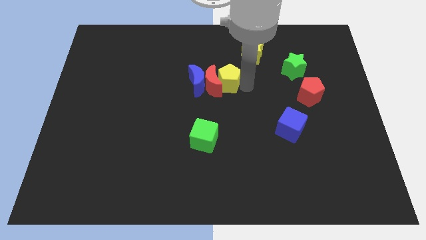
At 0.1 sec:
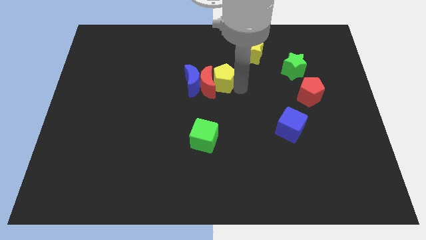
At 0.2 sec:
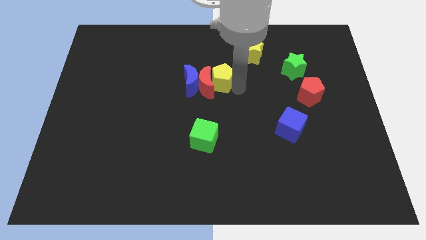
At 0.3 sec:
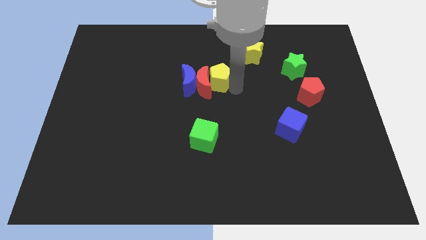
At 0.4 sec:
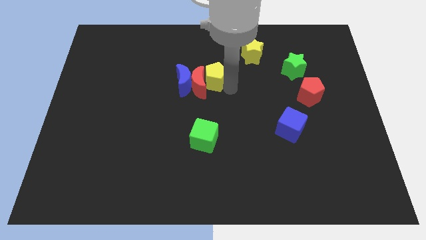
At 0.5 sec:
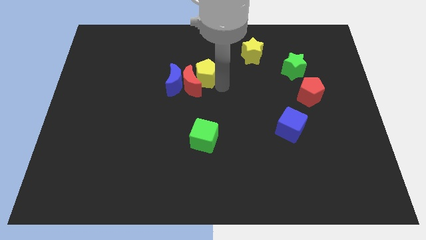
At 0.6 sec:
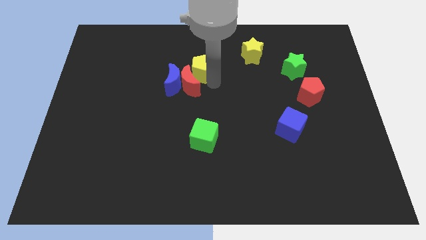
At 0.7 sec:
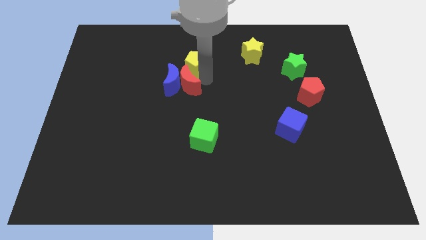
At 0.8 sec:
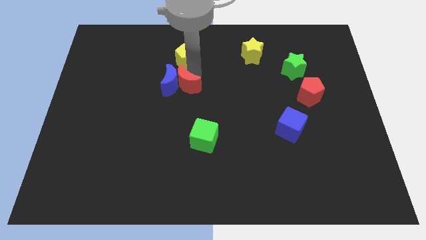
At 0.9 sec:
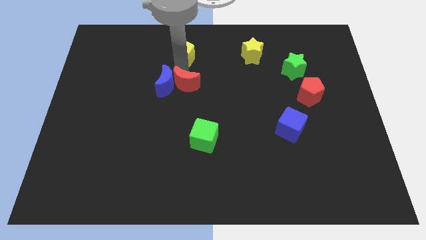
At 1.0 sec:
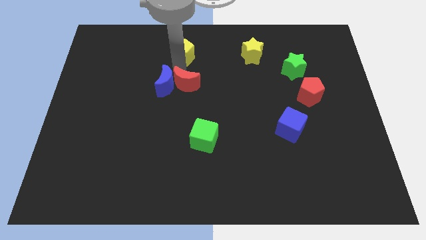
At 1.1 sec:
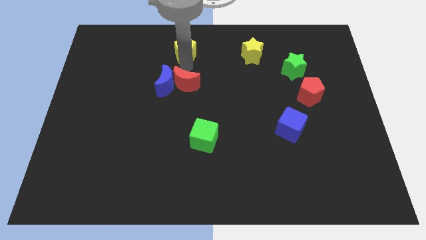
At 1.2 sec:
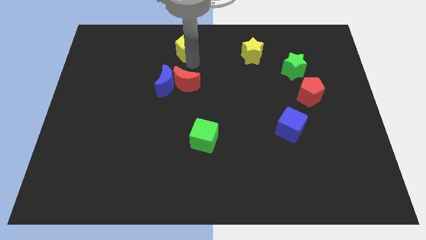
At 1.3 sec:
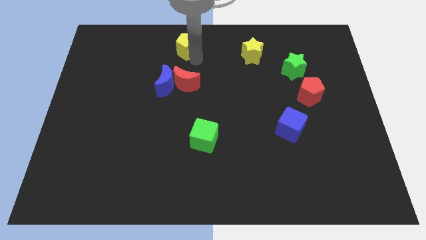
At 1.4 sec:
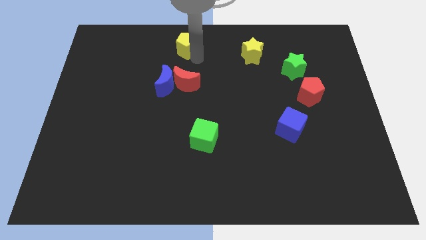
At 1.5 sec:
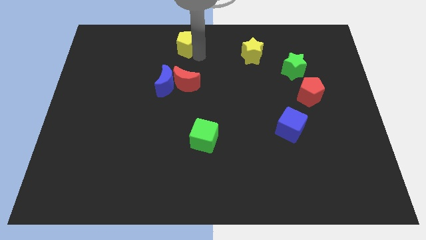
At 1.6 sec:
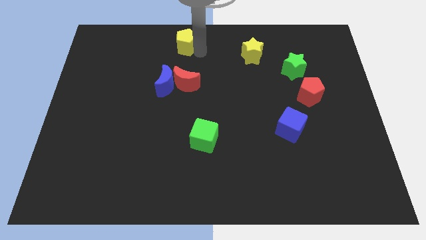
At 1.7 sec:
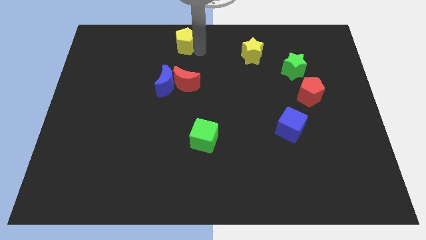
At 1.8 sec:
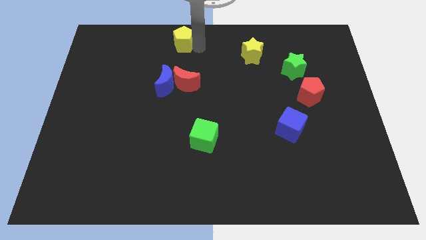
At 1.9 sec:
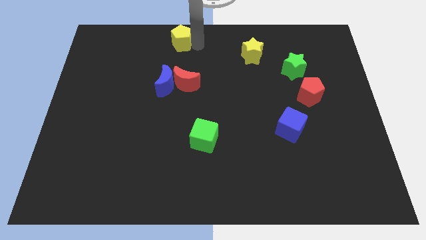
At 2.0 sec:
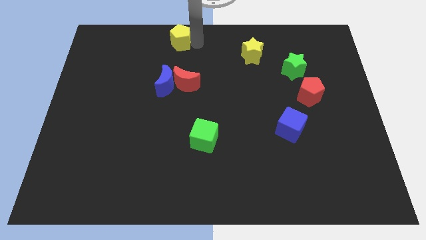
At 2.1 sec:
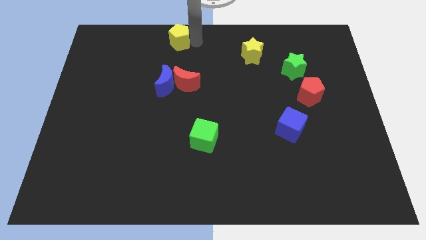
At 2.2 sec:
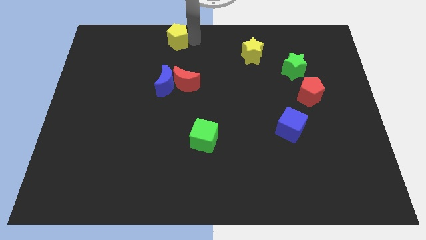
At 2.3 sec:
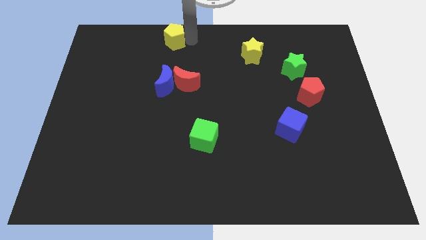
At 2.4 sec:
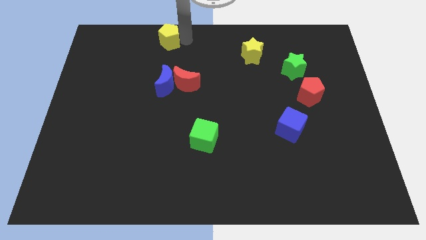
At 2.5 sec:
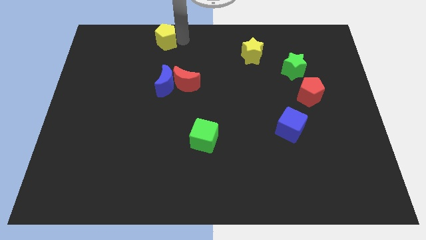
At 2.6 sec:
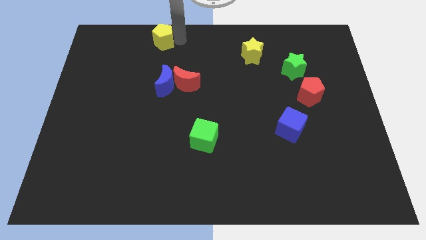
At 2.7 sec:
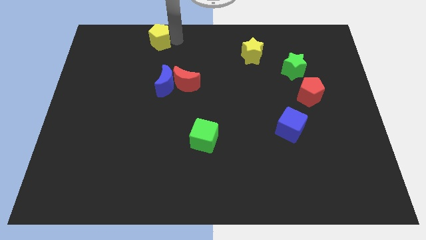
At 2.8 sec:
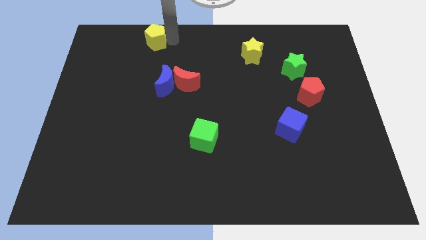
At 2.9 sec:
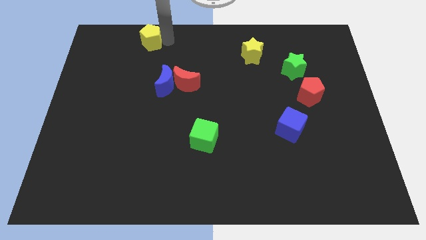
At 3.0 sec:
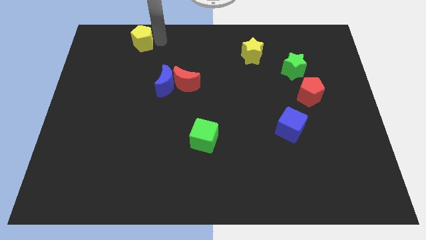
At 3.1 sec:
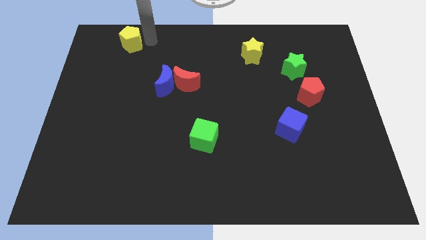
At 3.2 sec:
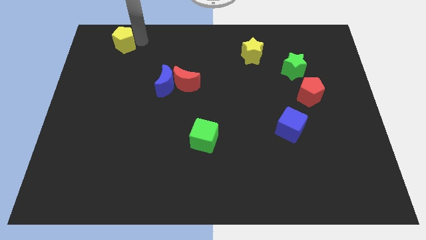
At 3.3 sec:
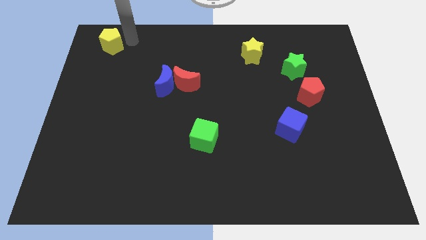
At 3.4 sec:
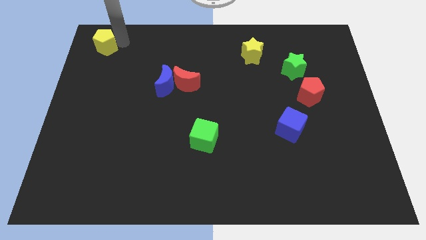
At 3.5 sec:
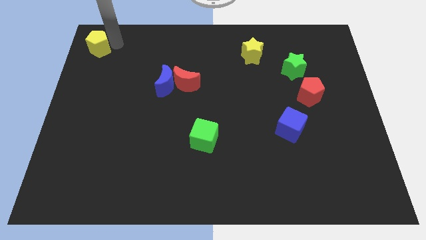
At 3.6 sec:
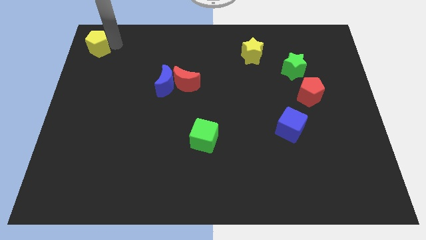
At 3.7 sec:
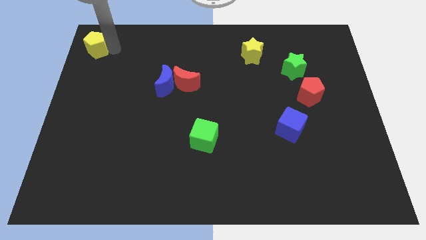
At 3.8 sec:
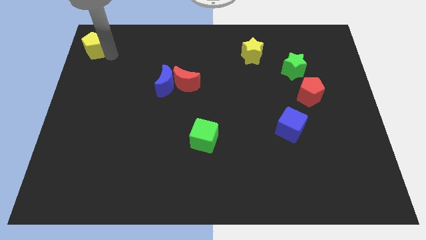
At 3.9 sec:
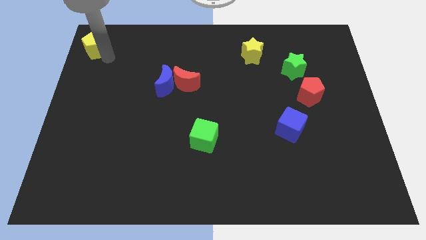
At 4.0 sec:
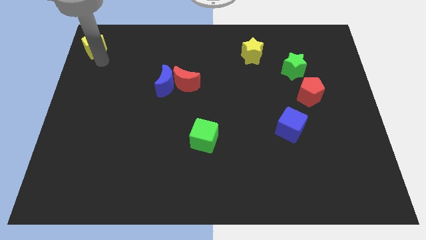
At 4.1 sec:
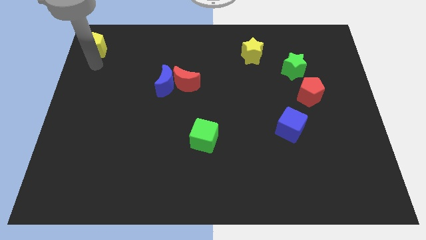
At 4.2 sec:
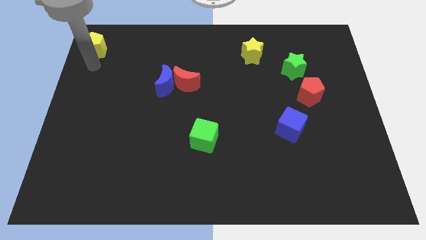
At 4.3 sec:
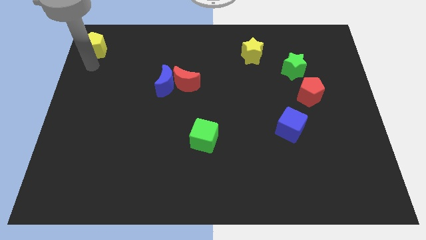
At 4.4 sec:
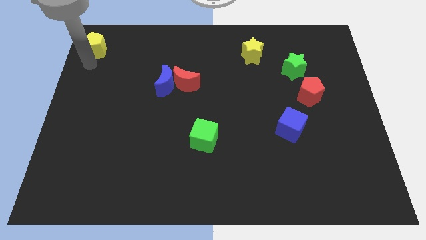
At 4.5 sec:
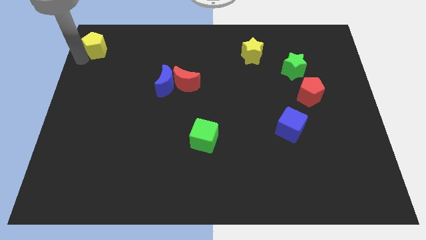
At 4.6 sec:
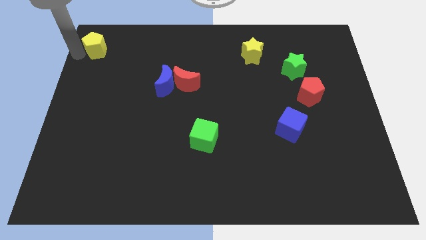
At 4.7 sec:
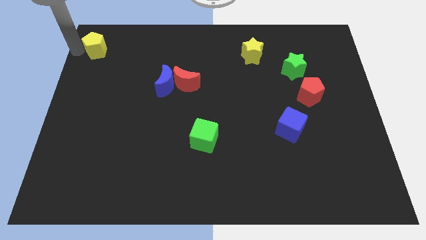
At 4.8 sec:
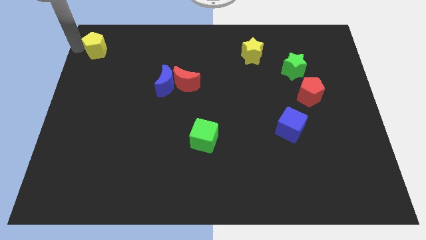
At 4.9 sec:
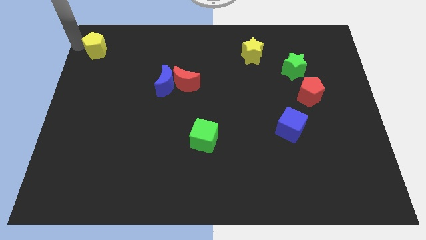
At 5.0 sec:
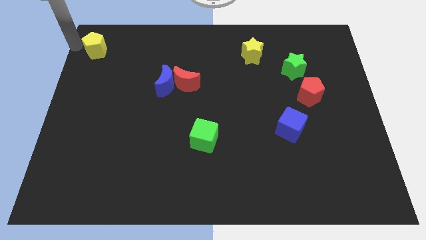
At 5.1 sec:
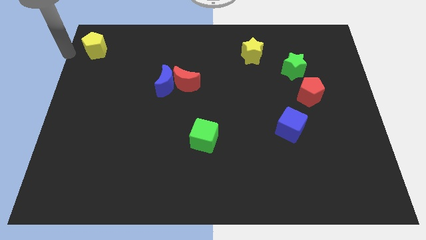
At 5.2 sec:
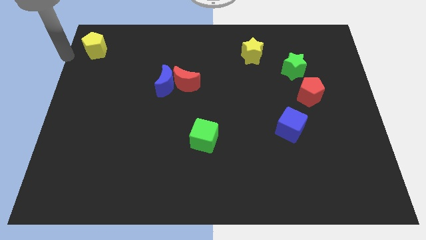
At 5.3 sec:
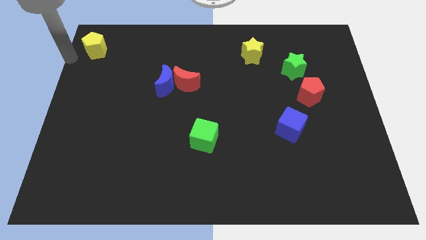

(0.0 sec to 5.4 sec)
separate red moon and yellow pentagon

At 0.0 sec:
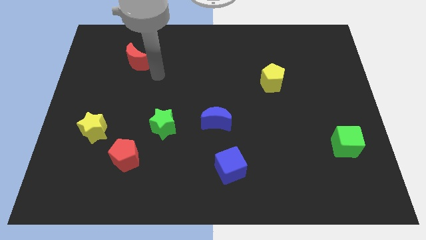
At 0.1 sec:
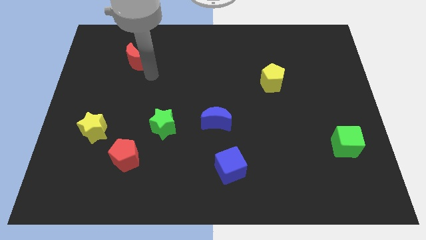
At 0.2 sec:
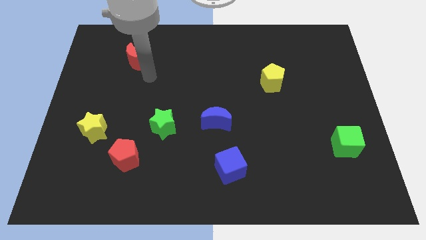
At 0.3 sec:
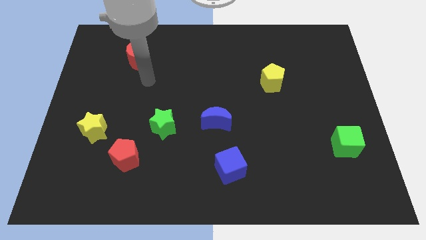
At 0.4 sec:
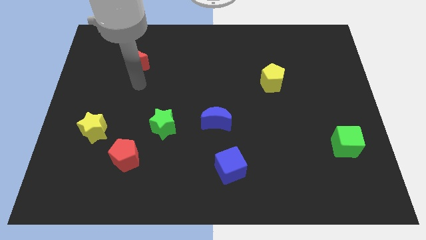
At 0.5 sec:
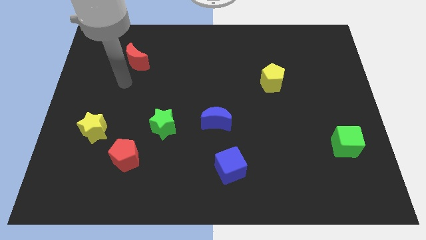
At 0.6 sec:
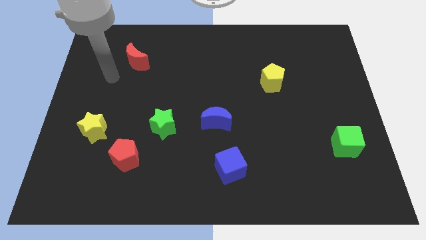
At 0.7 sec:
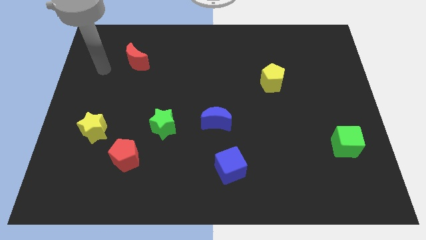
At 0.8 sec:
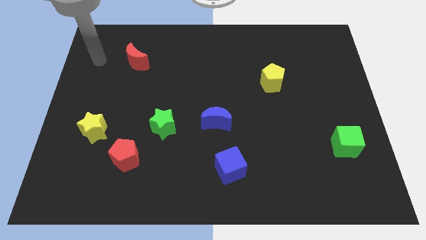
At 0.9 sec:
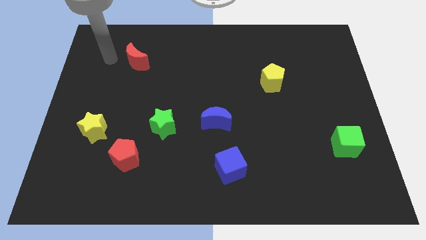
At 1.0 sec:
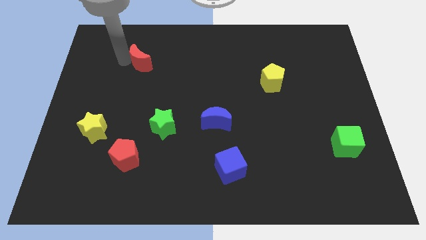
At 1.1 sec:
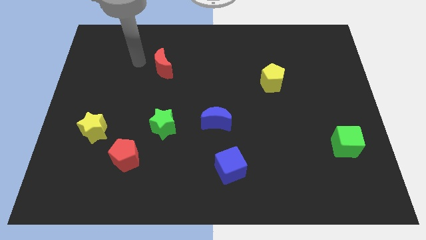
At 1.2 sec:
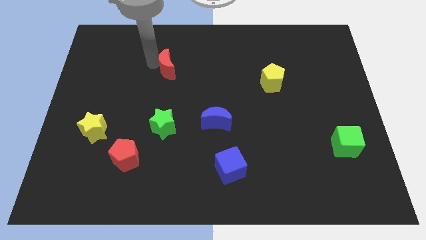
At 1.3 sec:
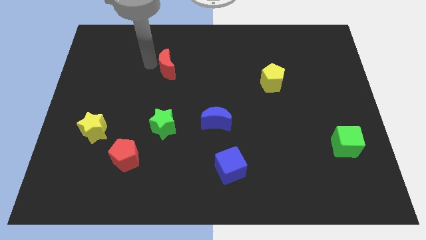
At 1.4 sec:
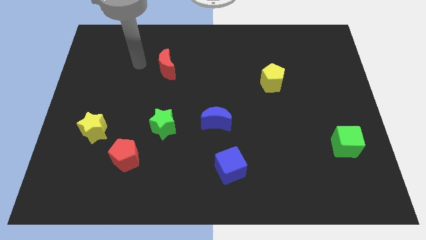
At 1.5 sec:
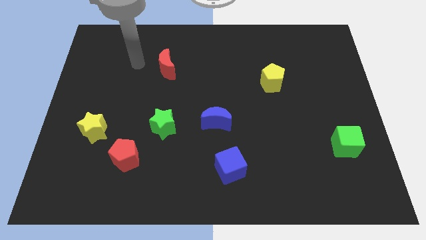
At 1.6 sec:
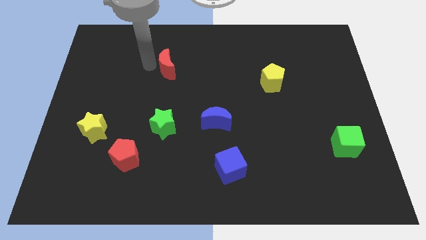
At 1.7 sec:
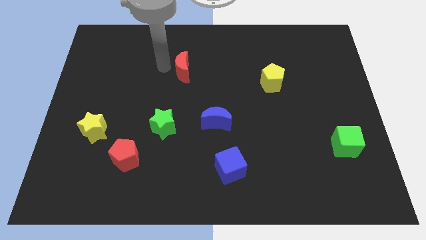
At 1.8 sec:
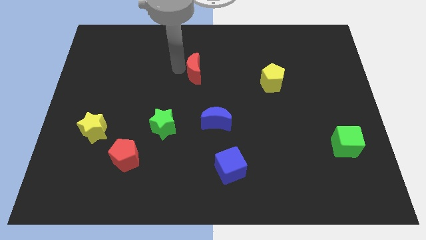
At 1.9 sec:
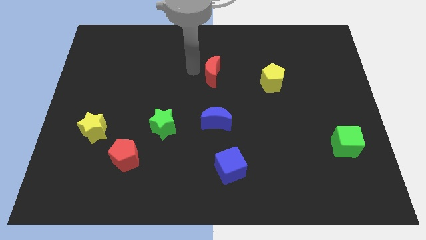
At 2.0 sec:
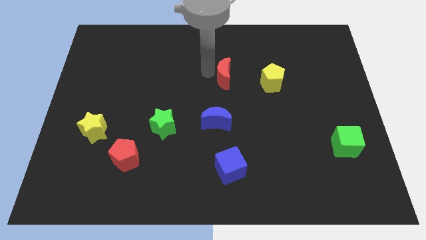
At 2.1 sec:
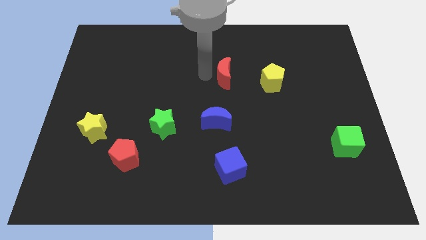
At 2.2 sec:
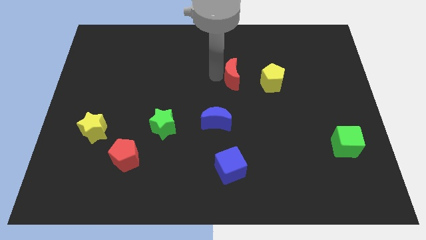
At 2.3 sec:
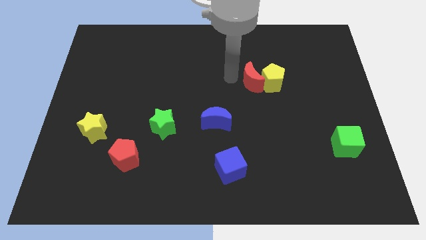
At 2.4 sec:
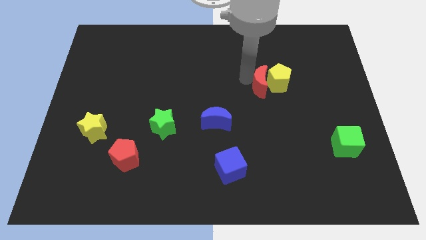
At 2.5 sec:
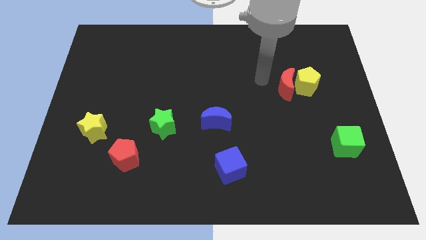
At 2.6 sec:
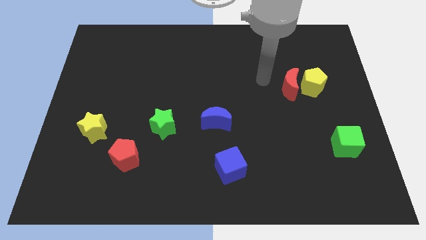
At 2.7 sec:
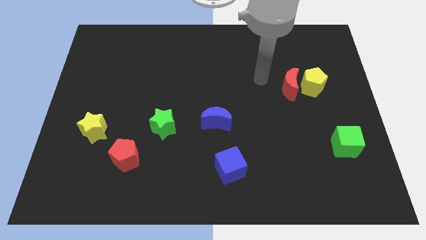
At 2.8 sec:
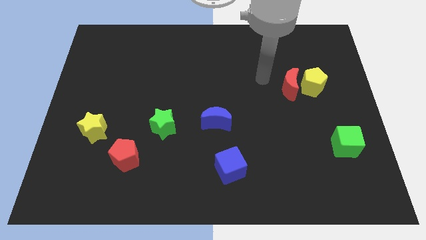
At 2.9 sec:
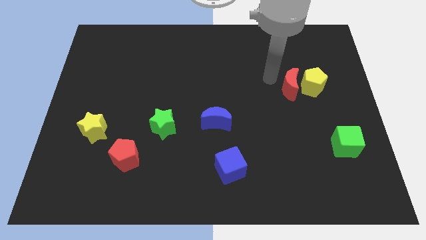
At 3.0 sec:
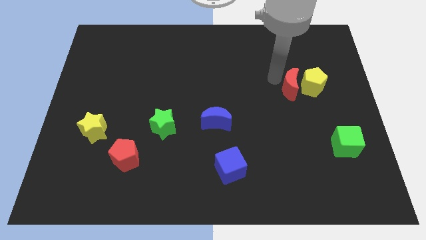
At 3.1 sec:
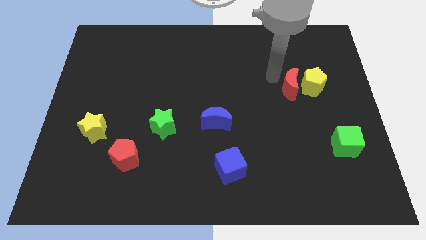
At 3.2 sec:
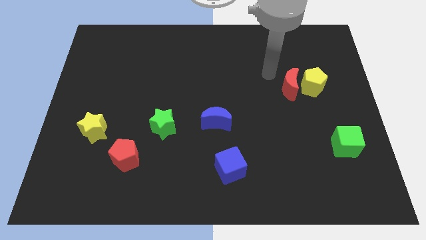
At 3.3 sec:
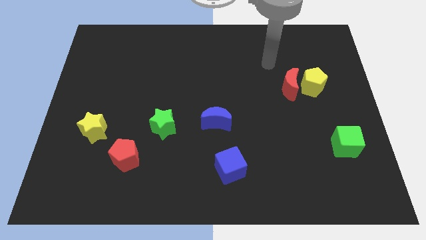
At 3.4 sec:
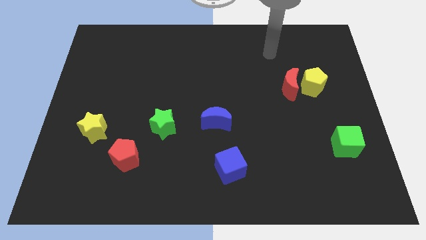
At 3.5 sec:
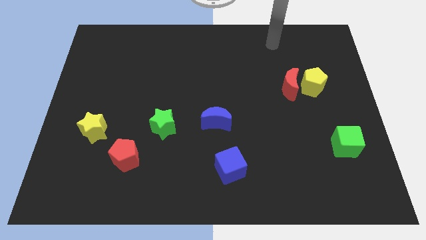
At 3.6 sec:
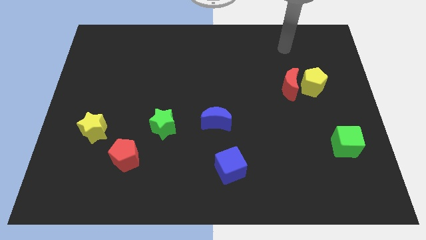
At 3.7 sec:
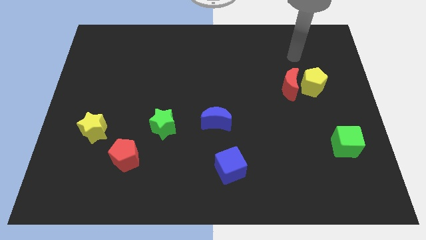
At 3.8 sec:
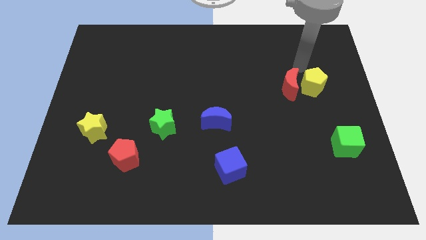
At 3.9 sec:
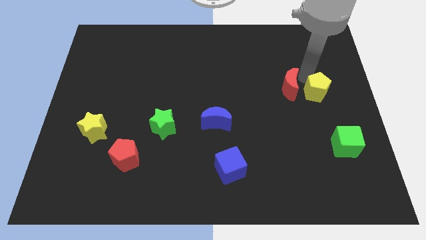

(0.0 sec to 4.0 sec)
move the crescent towards the yellow pentagon
